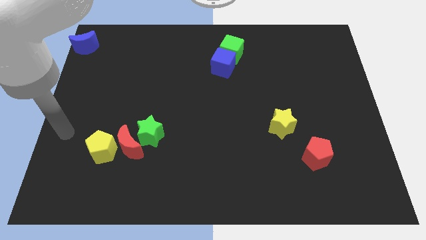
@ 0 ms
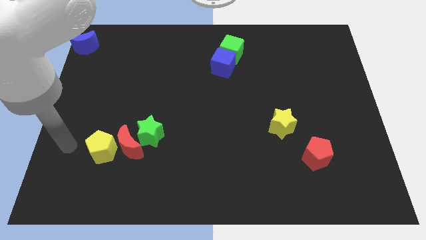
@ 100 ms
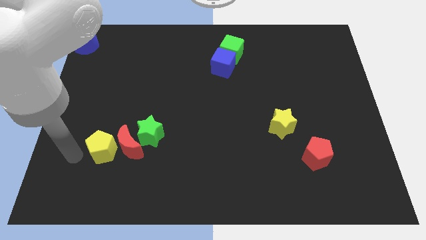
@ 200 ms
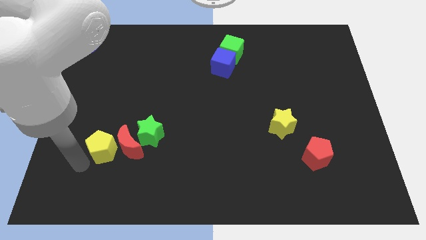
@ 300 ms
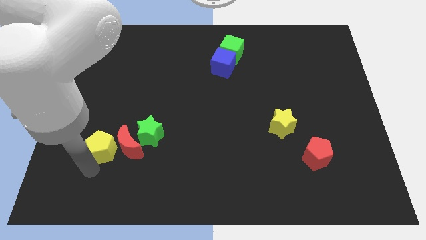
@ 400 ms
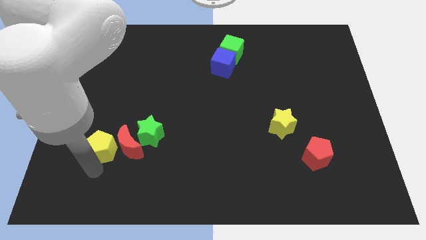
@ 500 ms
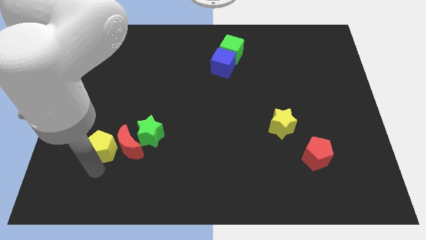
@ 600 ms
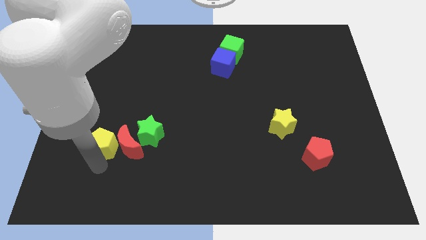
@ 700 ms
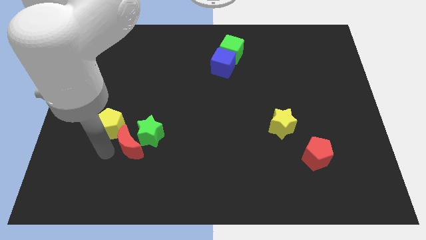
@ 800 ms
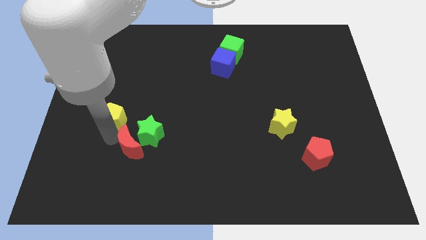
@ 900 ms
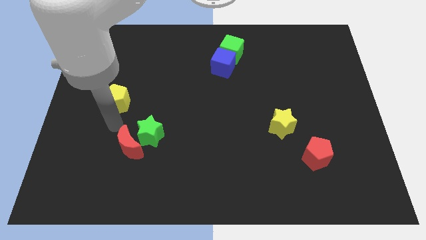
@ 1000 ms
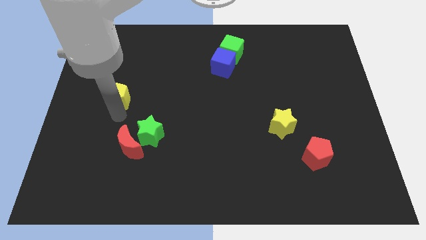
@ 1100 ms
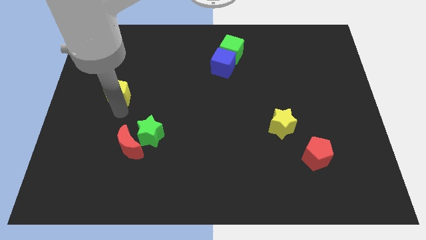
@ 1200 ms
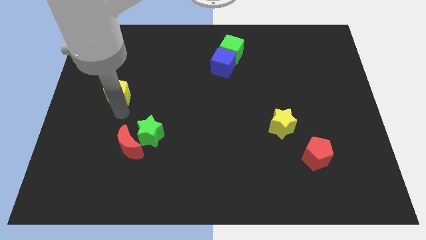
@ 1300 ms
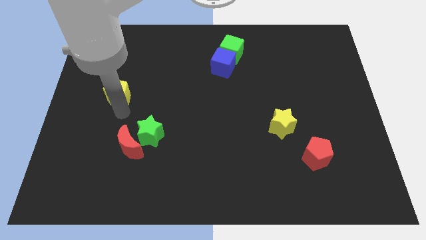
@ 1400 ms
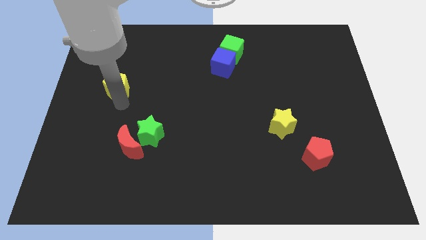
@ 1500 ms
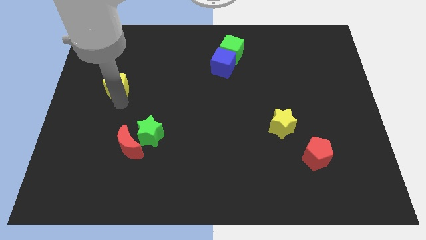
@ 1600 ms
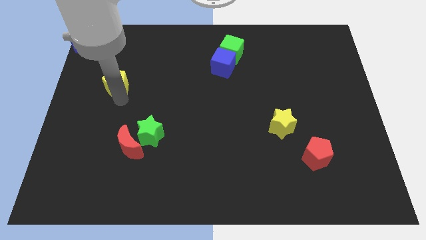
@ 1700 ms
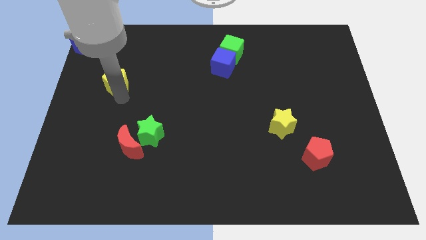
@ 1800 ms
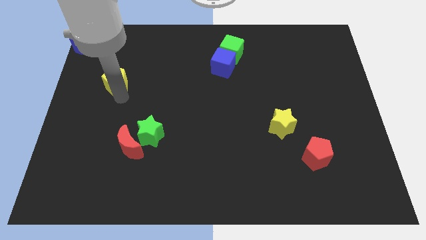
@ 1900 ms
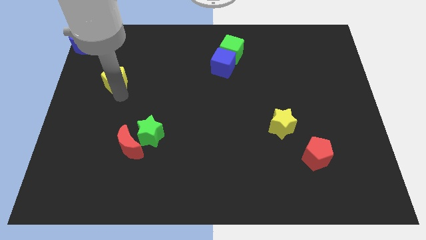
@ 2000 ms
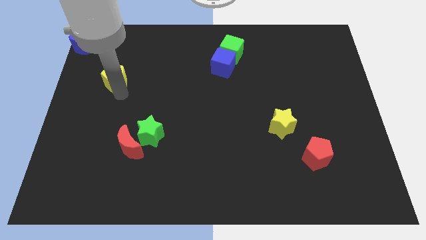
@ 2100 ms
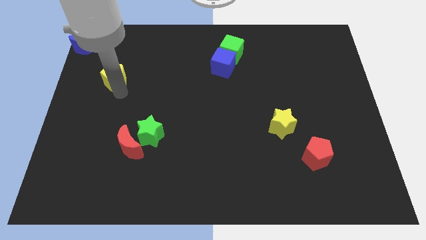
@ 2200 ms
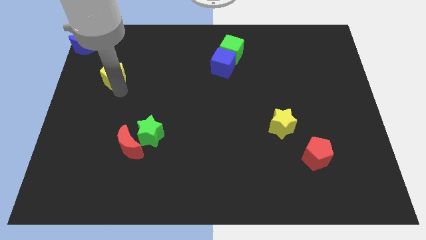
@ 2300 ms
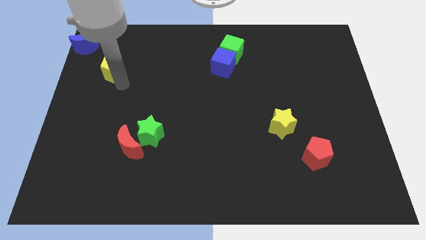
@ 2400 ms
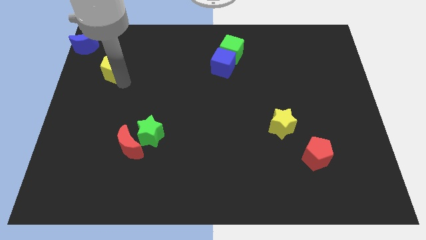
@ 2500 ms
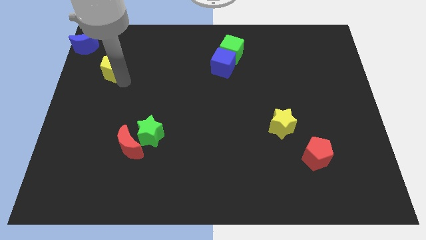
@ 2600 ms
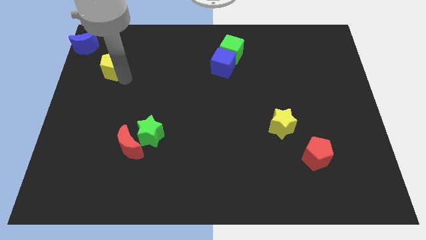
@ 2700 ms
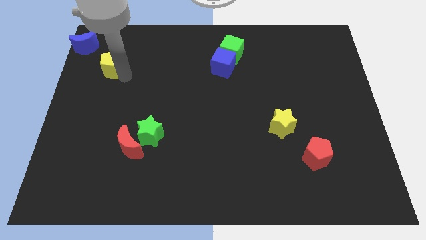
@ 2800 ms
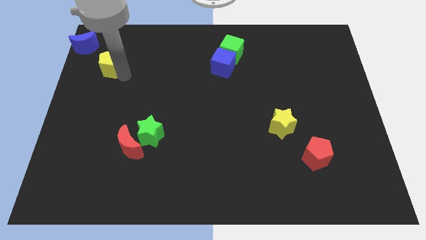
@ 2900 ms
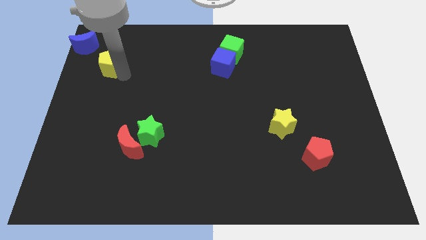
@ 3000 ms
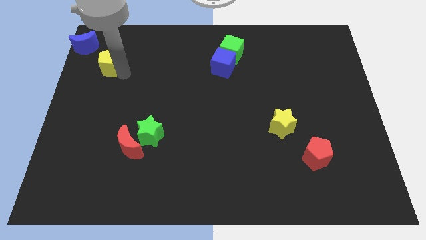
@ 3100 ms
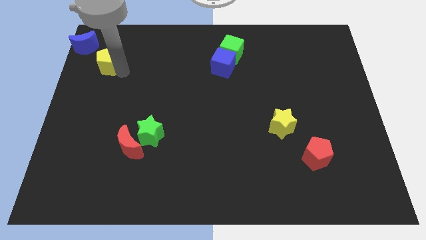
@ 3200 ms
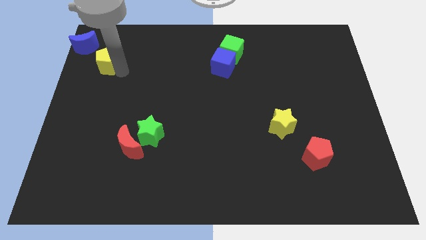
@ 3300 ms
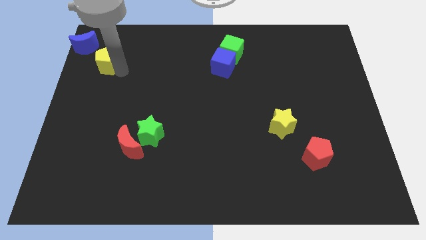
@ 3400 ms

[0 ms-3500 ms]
drag the yellow pentagon near the blue crescent

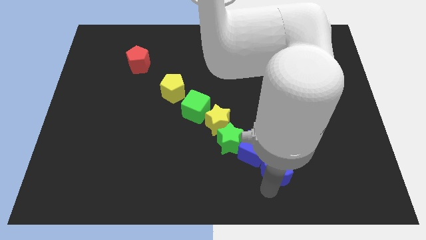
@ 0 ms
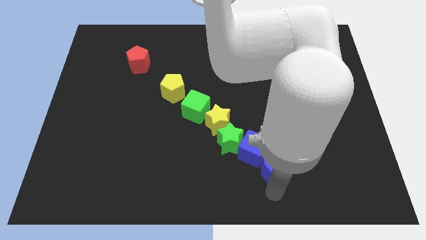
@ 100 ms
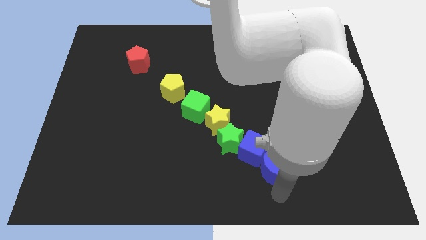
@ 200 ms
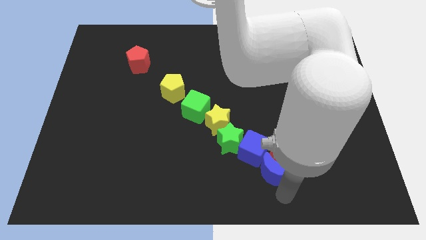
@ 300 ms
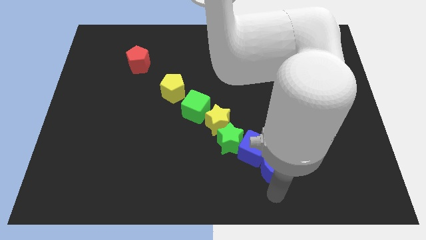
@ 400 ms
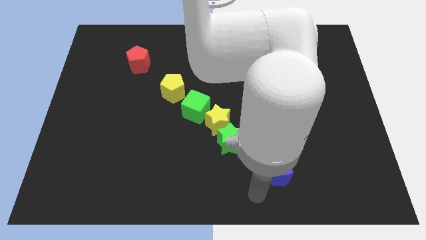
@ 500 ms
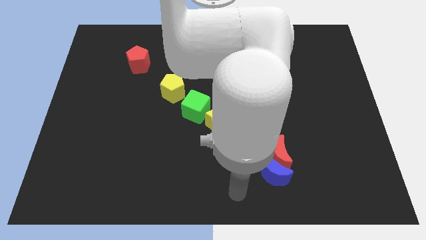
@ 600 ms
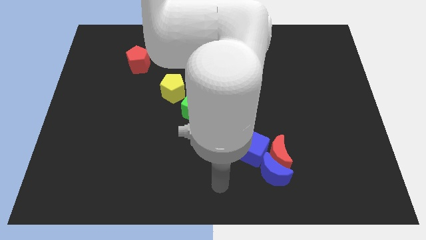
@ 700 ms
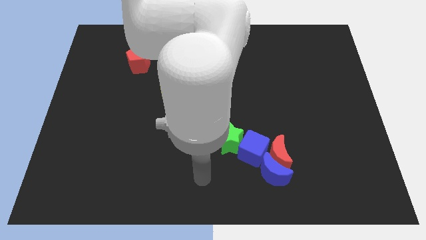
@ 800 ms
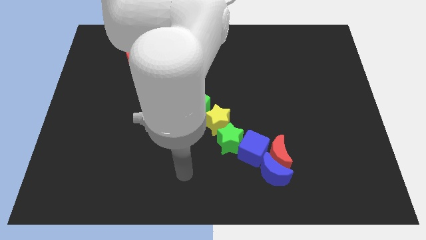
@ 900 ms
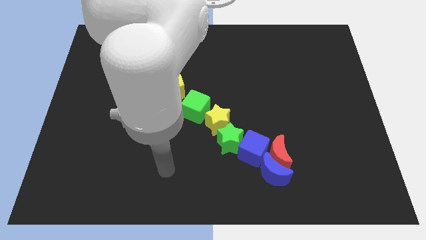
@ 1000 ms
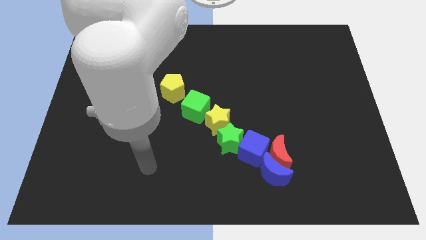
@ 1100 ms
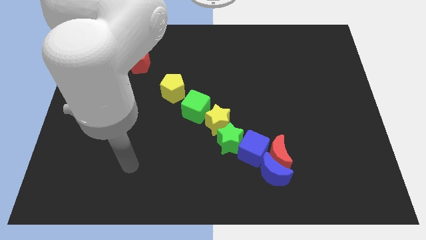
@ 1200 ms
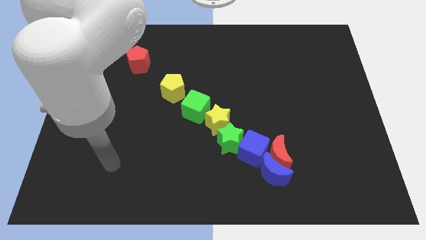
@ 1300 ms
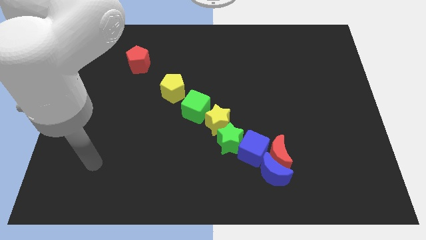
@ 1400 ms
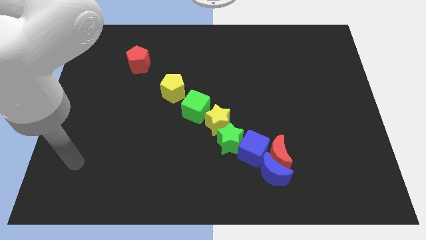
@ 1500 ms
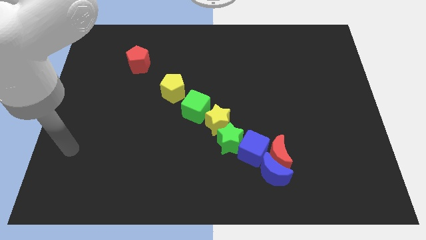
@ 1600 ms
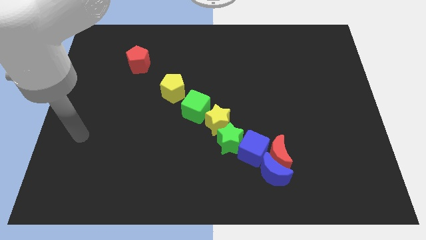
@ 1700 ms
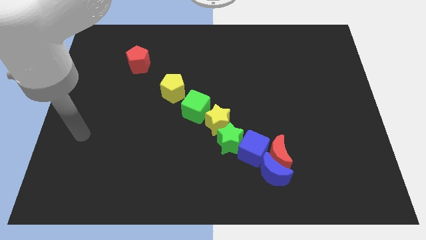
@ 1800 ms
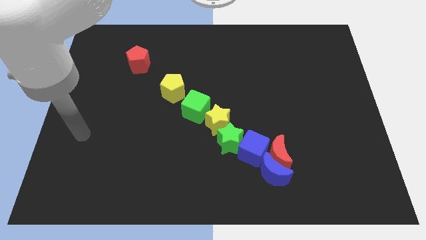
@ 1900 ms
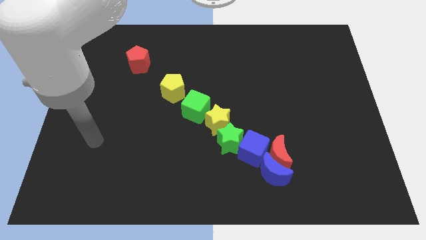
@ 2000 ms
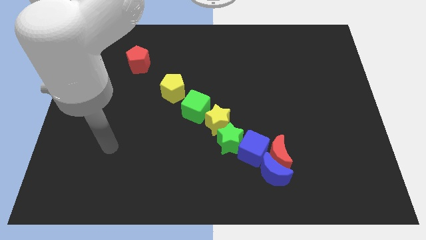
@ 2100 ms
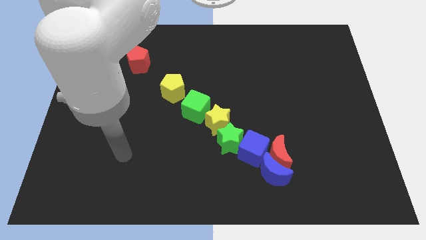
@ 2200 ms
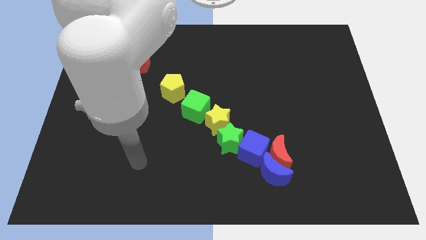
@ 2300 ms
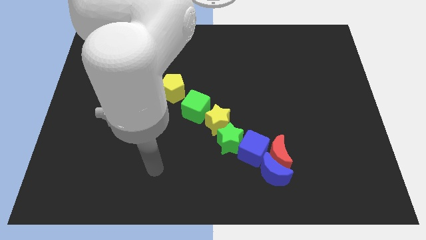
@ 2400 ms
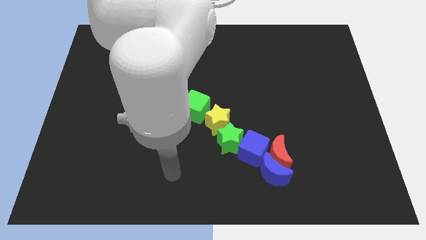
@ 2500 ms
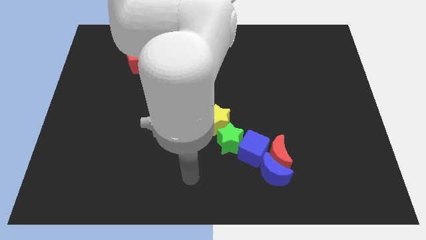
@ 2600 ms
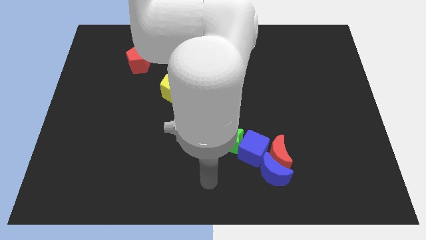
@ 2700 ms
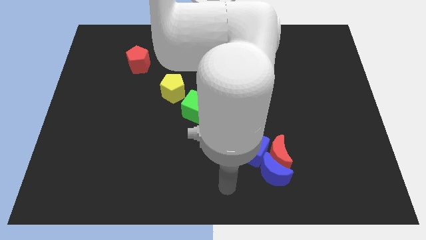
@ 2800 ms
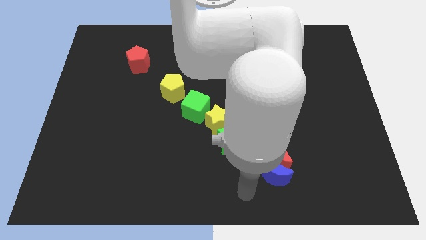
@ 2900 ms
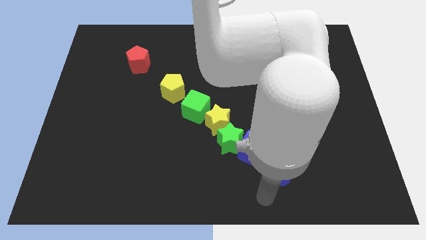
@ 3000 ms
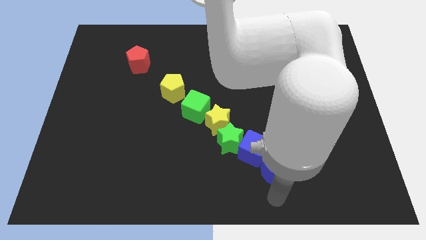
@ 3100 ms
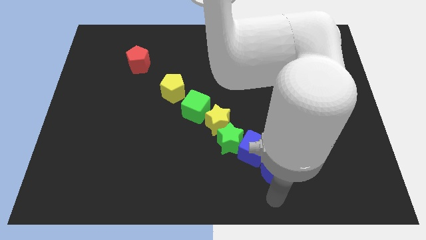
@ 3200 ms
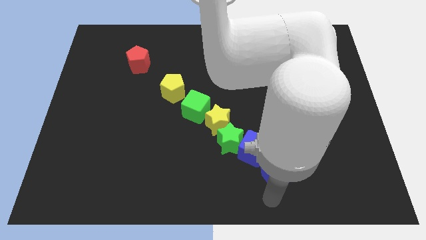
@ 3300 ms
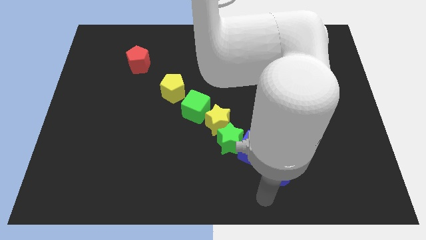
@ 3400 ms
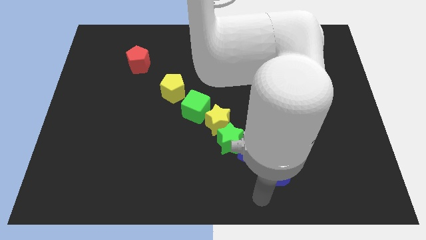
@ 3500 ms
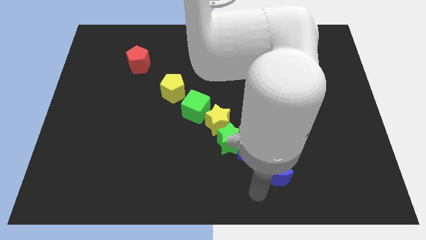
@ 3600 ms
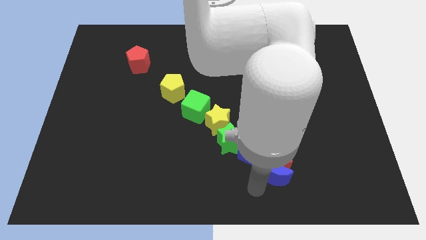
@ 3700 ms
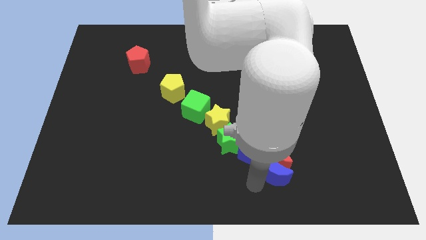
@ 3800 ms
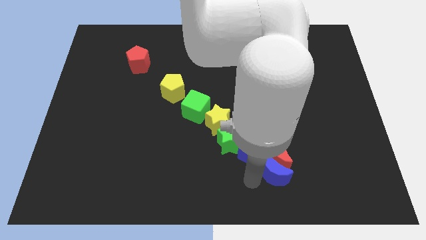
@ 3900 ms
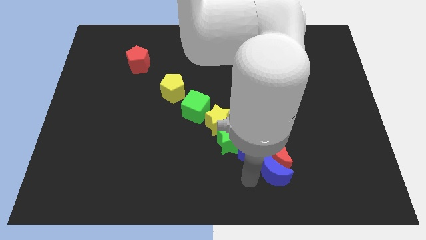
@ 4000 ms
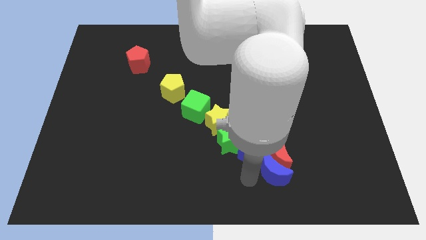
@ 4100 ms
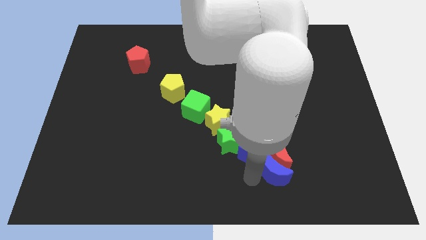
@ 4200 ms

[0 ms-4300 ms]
move the arm slightly towards the top

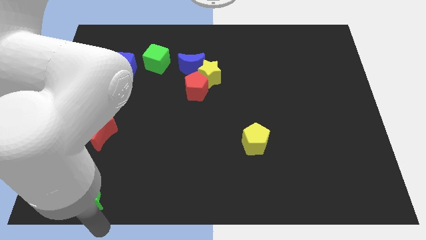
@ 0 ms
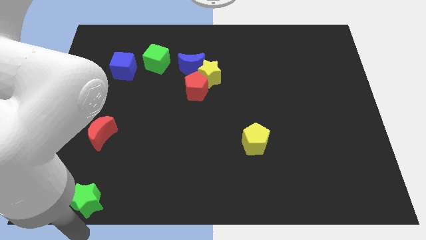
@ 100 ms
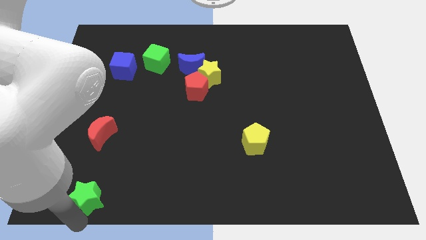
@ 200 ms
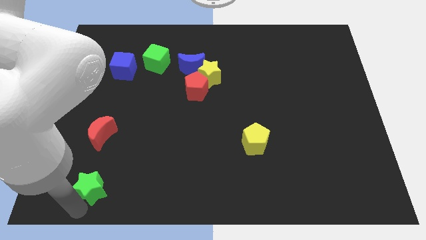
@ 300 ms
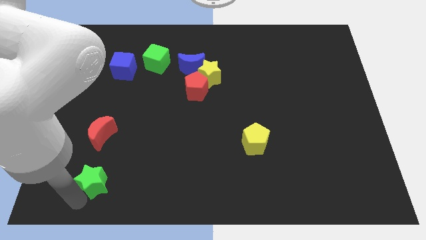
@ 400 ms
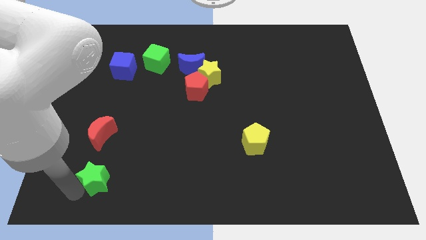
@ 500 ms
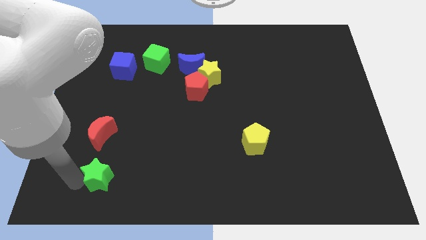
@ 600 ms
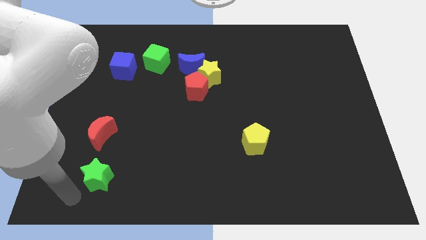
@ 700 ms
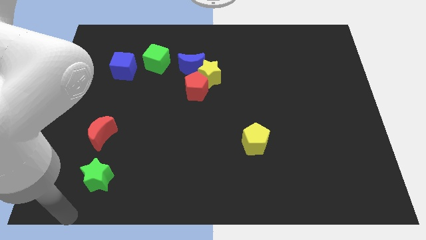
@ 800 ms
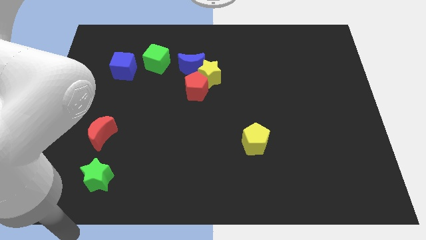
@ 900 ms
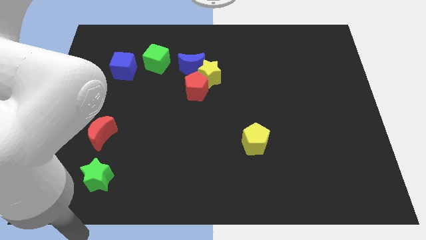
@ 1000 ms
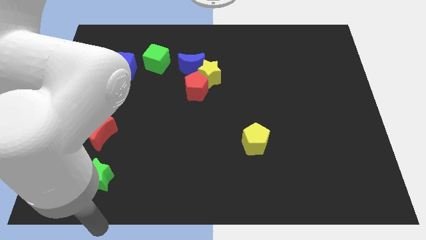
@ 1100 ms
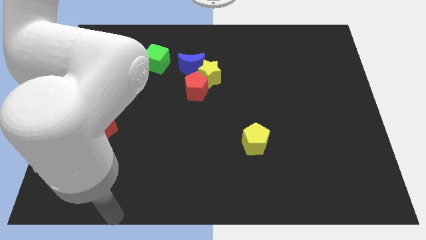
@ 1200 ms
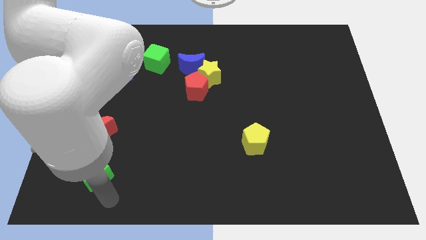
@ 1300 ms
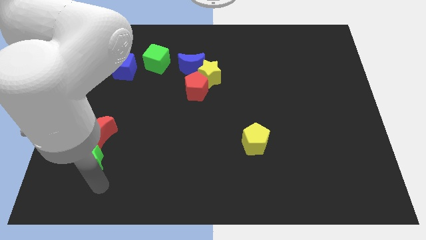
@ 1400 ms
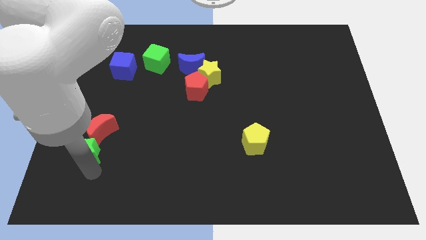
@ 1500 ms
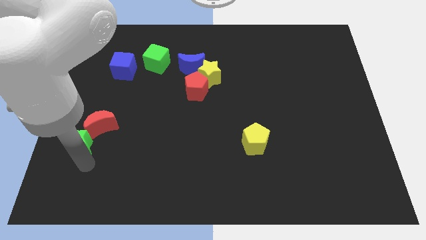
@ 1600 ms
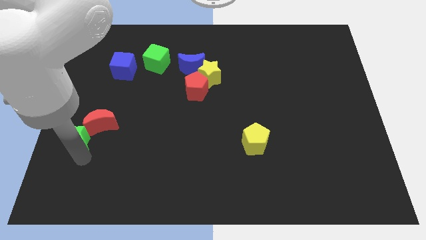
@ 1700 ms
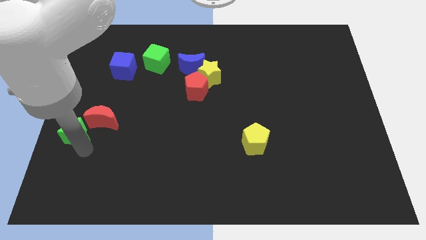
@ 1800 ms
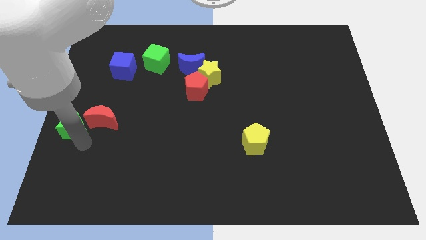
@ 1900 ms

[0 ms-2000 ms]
push the green star close to the red crescent
